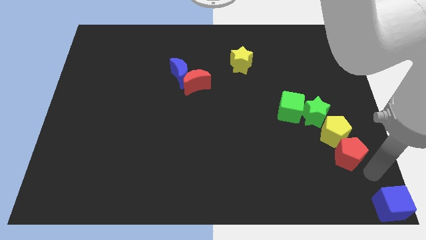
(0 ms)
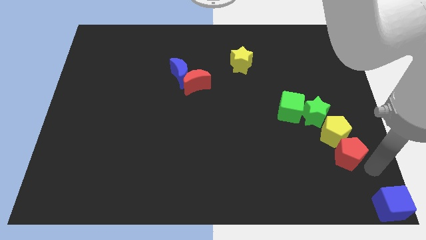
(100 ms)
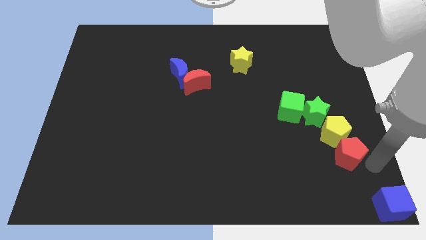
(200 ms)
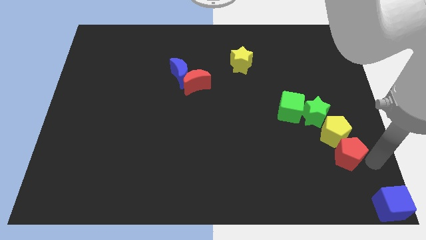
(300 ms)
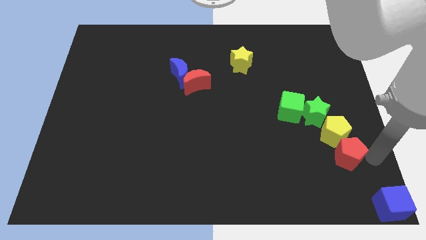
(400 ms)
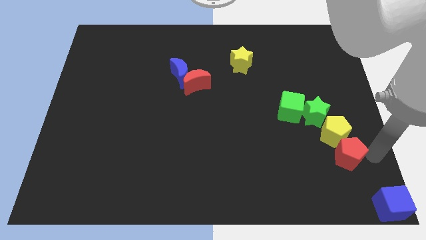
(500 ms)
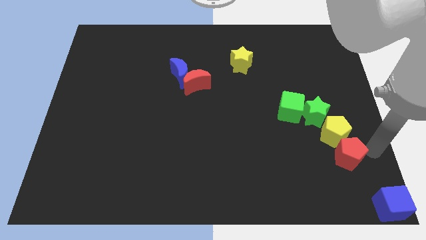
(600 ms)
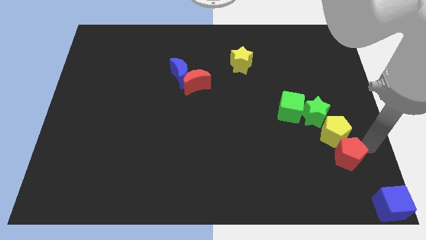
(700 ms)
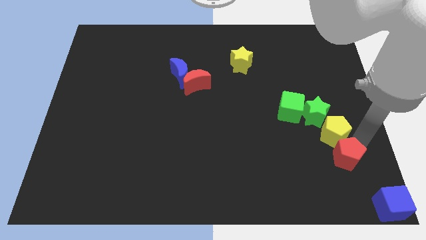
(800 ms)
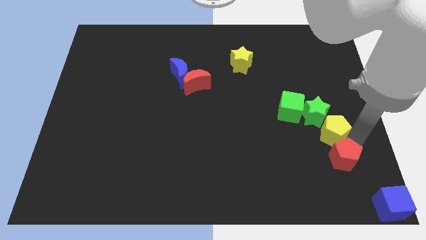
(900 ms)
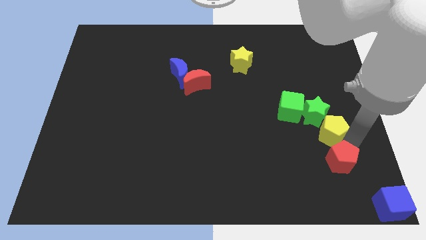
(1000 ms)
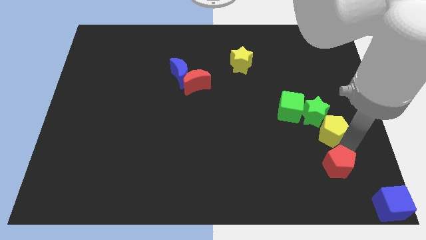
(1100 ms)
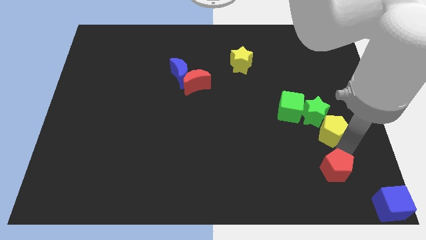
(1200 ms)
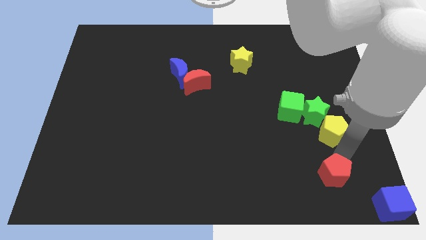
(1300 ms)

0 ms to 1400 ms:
push the red pentagon slightly down

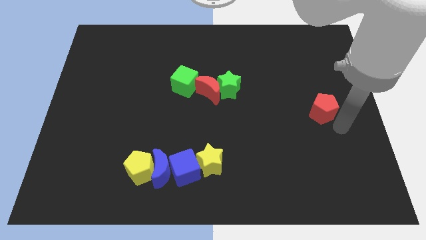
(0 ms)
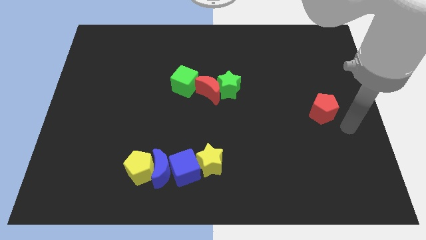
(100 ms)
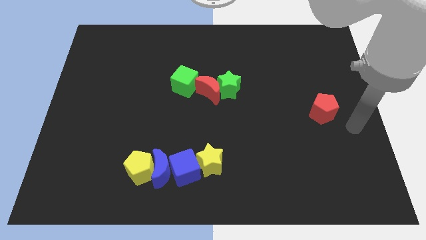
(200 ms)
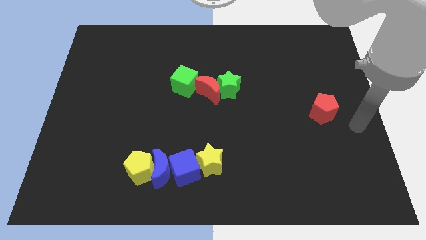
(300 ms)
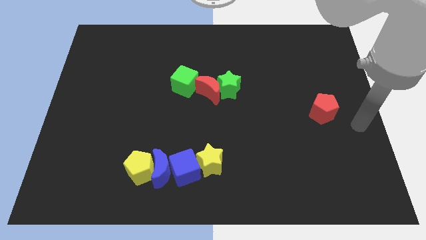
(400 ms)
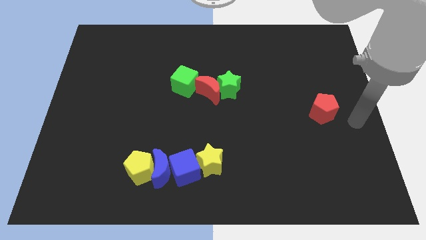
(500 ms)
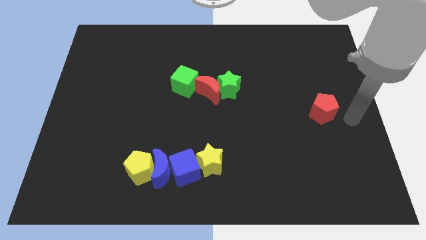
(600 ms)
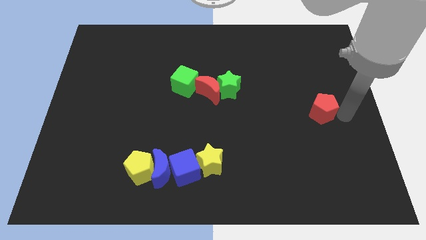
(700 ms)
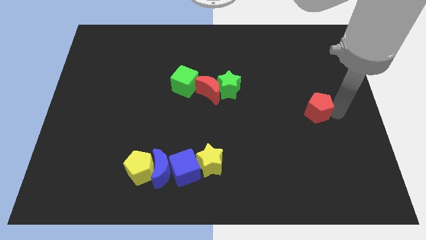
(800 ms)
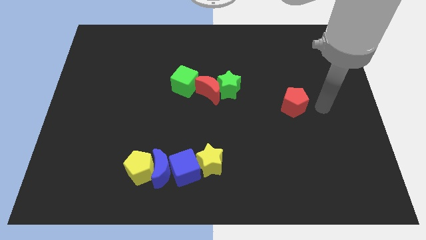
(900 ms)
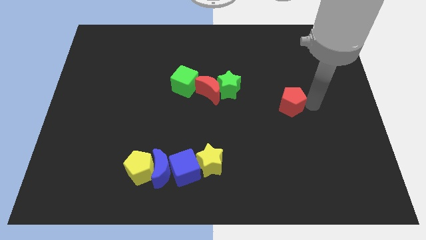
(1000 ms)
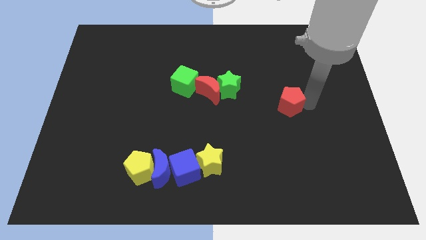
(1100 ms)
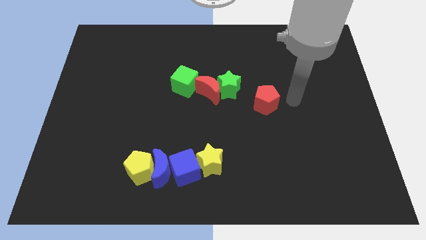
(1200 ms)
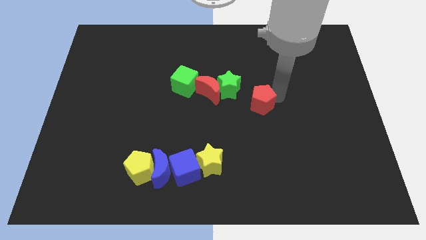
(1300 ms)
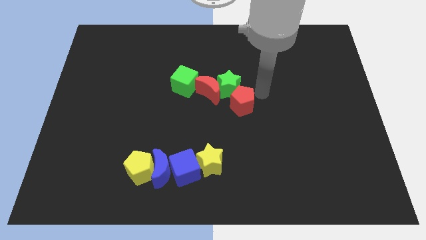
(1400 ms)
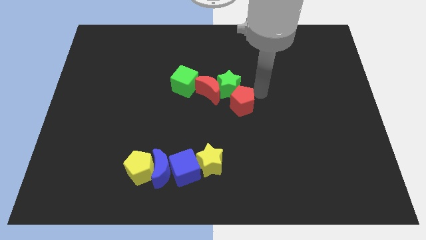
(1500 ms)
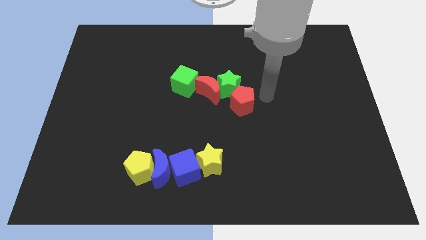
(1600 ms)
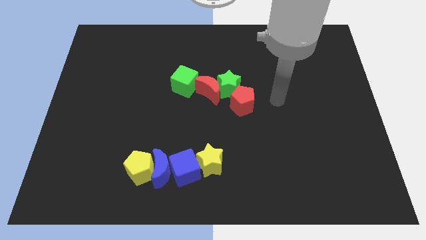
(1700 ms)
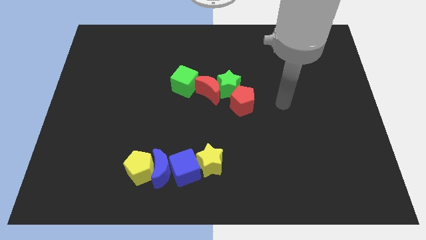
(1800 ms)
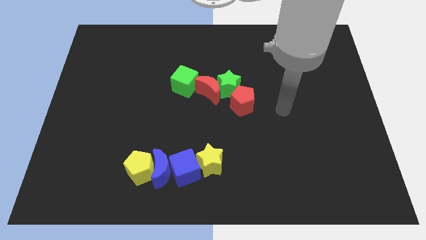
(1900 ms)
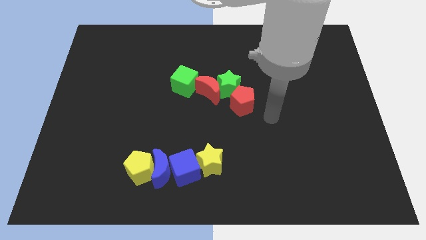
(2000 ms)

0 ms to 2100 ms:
slide the red pentagon into the green star

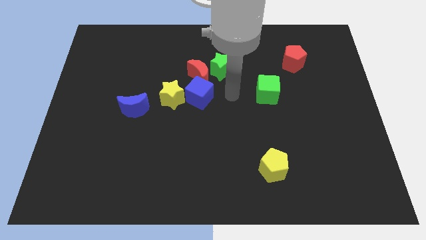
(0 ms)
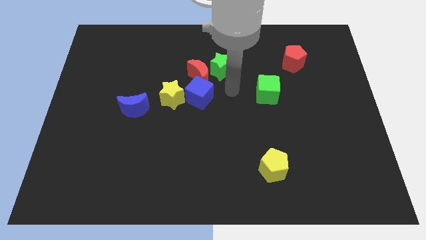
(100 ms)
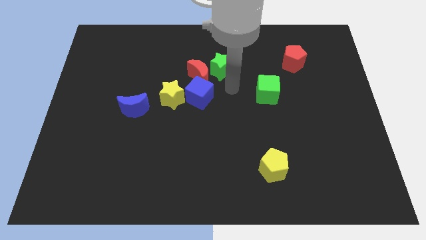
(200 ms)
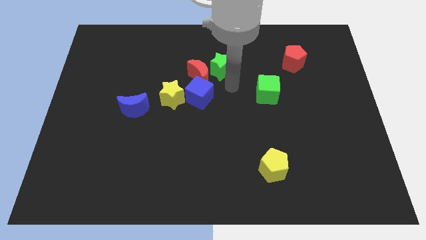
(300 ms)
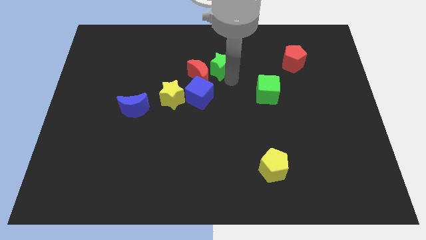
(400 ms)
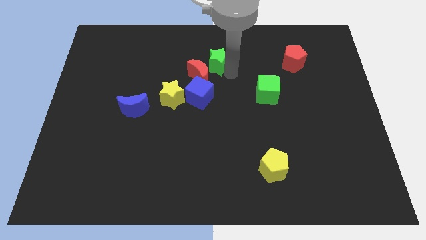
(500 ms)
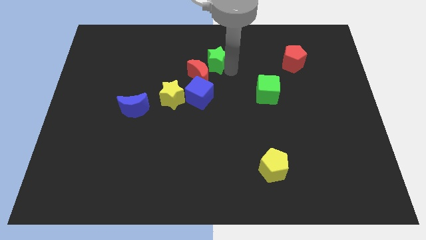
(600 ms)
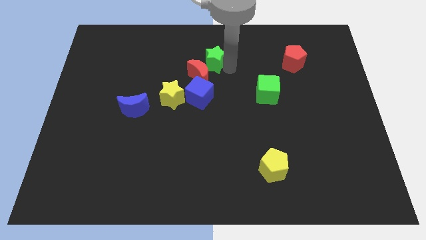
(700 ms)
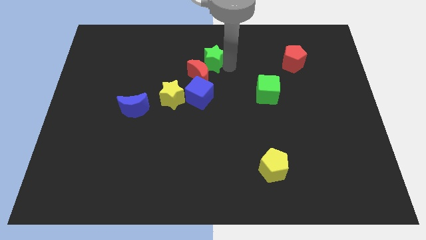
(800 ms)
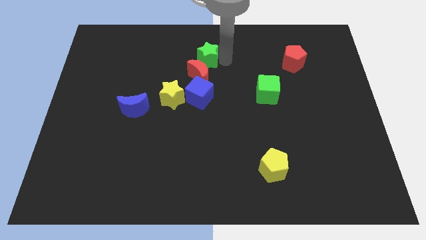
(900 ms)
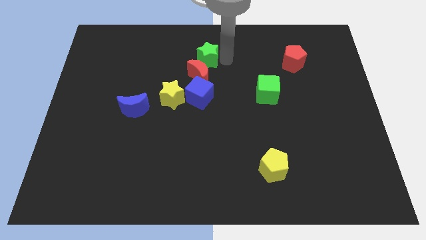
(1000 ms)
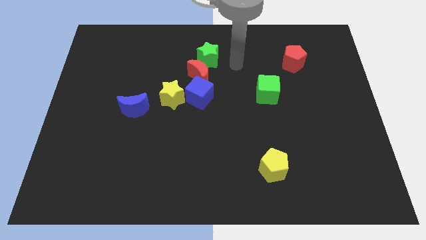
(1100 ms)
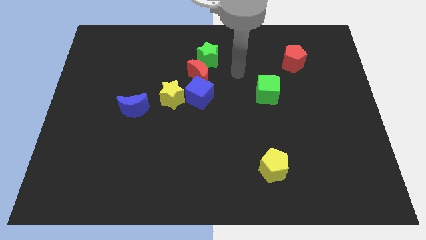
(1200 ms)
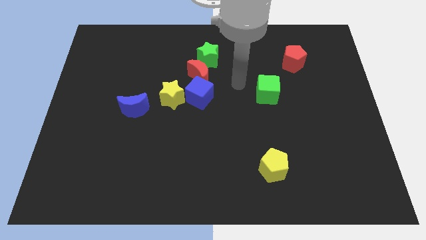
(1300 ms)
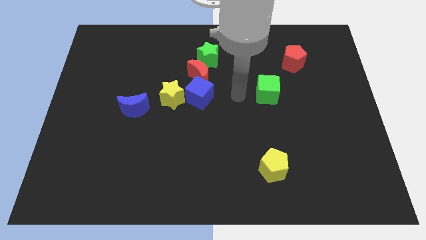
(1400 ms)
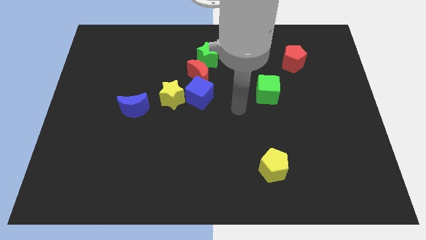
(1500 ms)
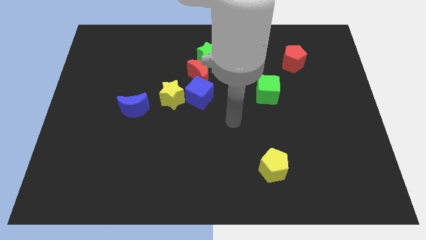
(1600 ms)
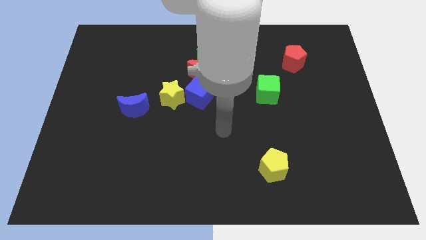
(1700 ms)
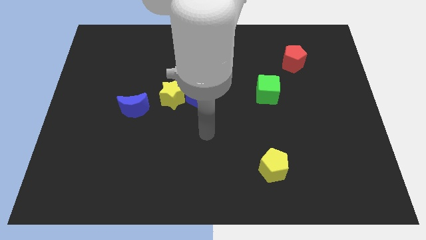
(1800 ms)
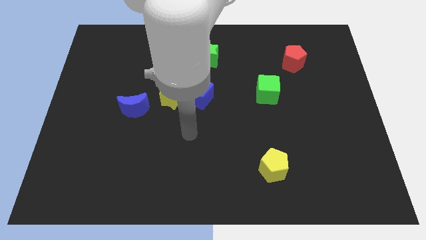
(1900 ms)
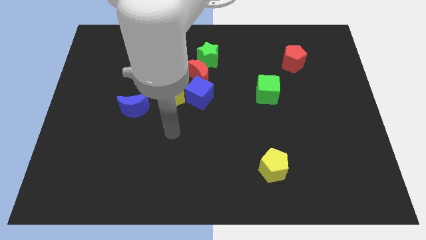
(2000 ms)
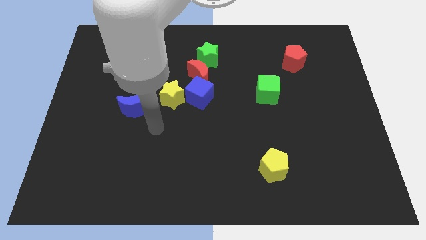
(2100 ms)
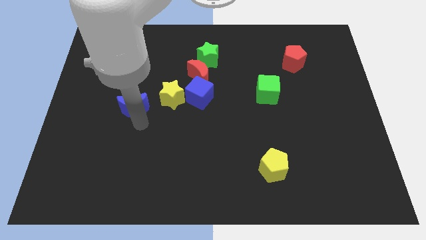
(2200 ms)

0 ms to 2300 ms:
place your hand below the blue moon

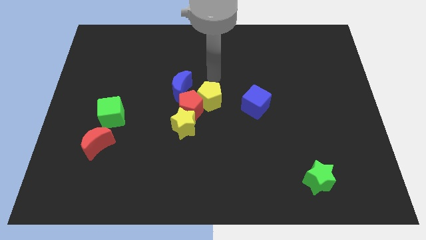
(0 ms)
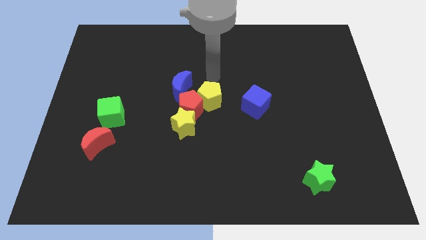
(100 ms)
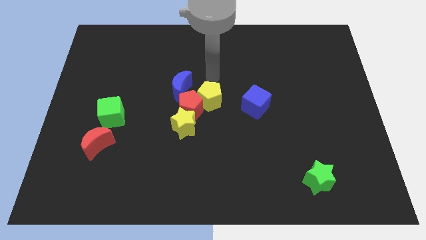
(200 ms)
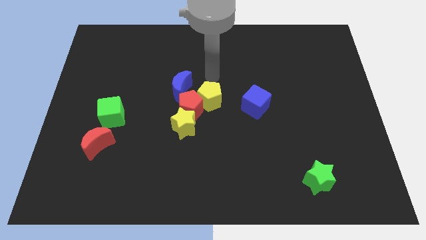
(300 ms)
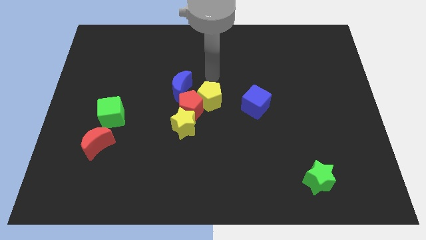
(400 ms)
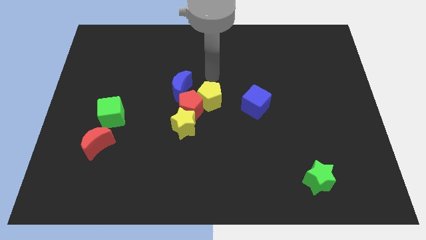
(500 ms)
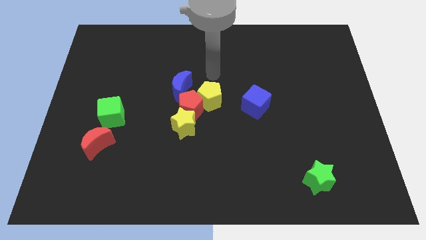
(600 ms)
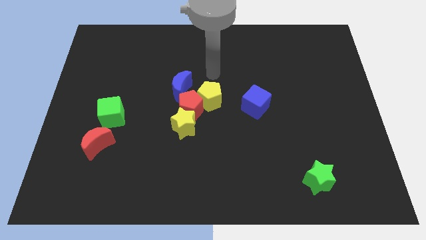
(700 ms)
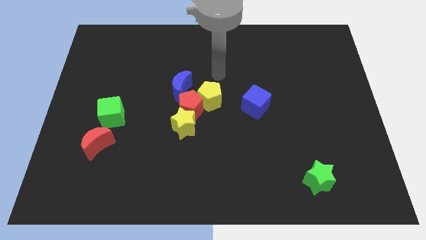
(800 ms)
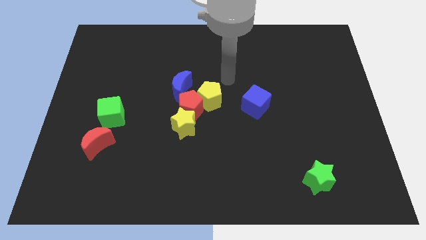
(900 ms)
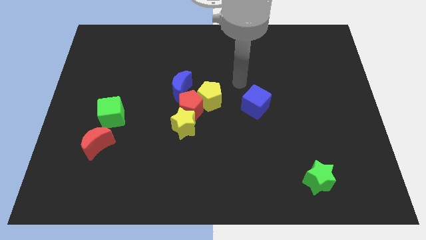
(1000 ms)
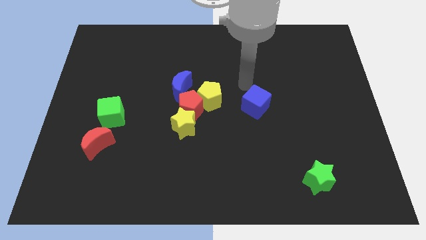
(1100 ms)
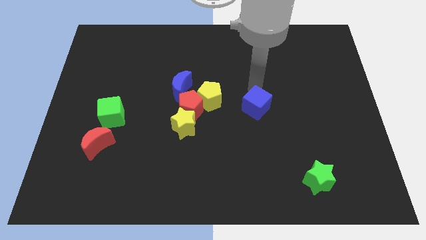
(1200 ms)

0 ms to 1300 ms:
move the arm to the top of blue cube

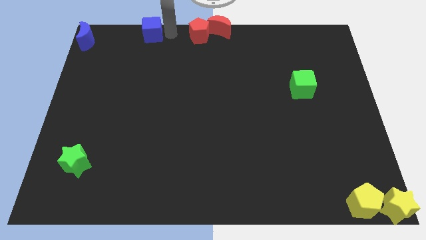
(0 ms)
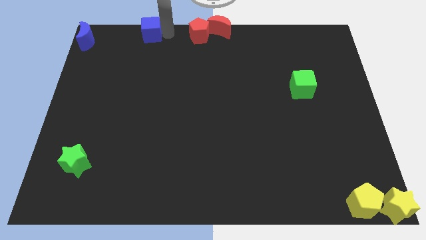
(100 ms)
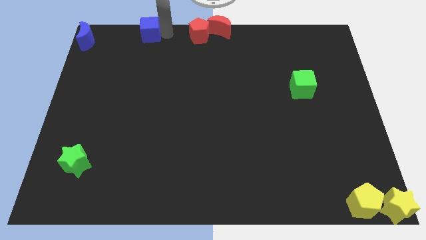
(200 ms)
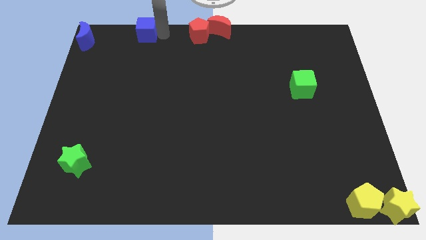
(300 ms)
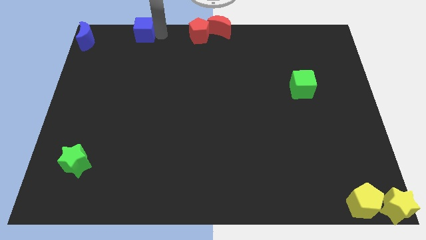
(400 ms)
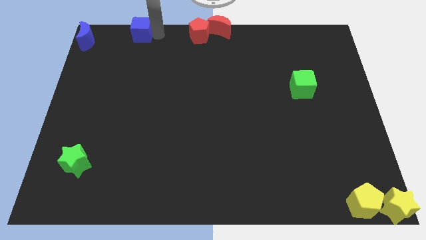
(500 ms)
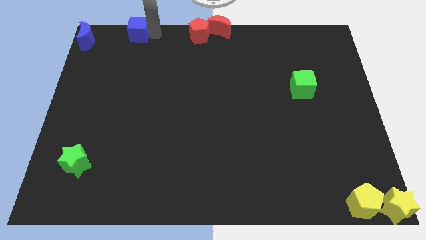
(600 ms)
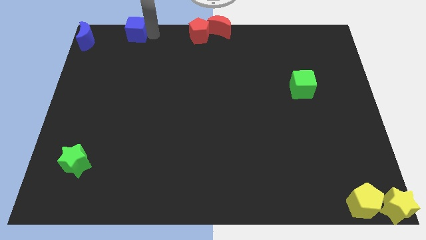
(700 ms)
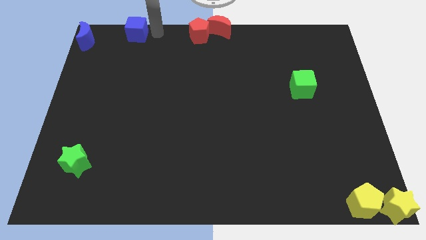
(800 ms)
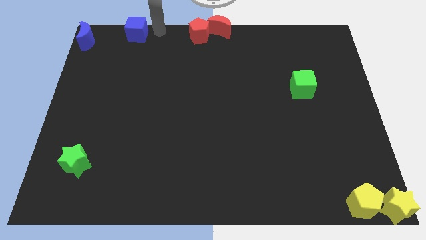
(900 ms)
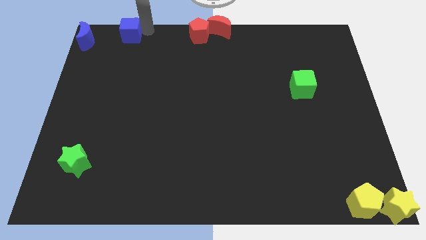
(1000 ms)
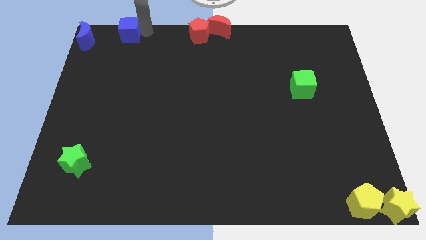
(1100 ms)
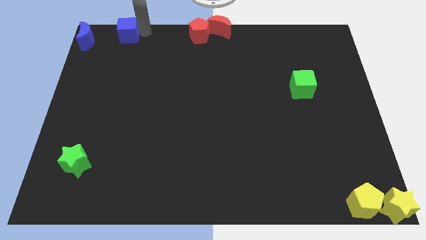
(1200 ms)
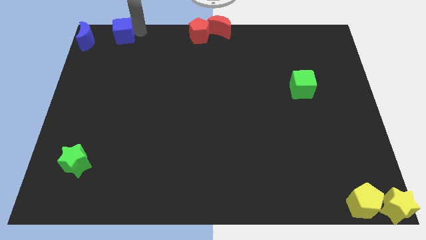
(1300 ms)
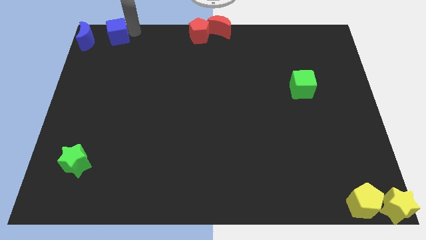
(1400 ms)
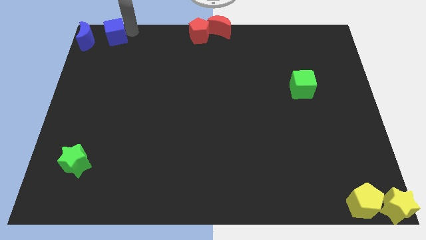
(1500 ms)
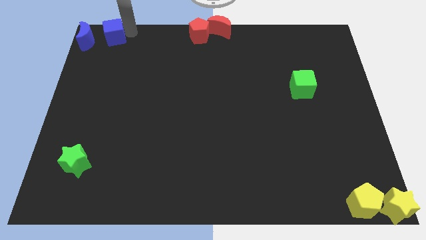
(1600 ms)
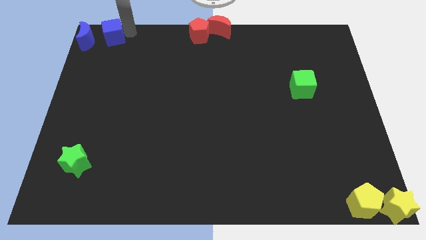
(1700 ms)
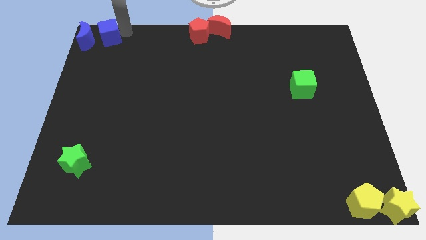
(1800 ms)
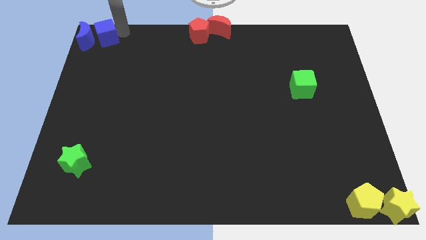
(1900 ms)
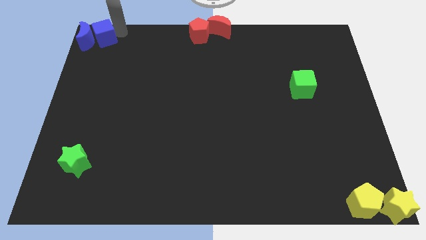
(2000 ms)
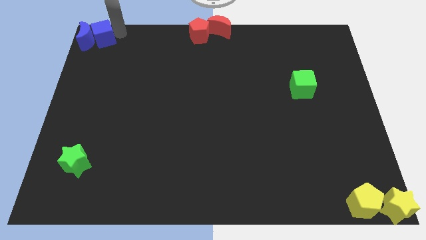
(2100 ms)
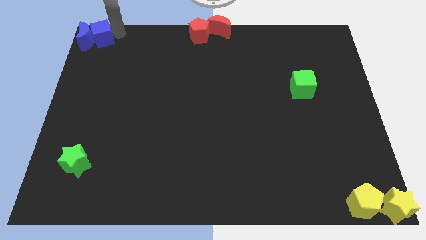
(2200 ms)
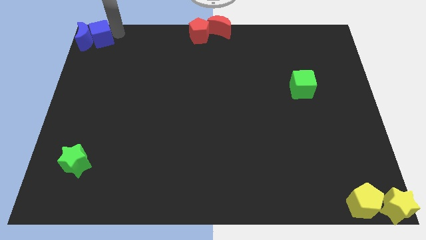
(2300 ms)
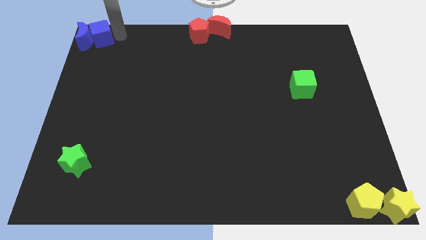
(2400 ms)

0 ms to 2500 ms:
move the blue cube into the blue moon
